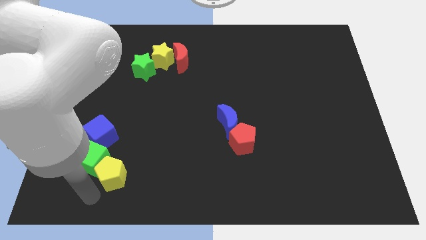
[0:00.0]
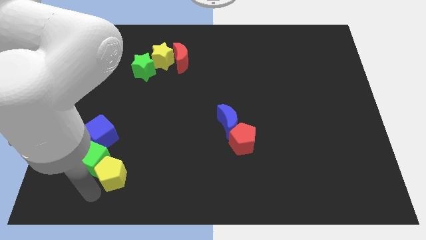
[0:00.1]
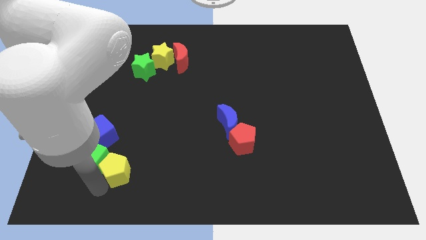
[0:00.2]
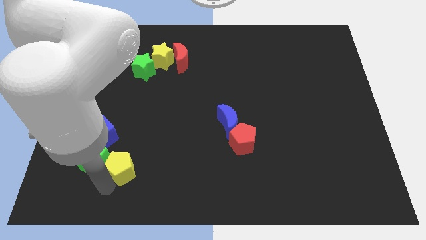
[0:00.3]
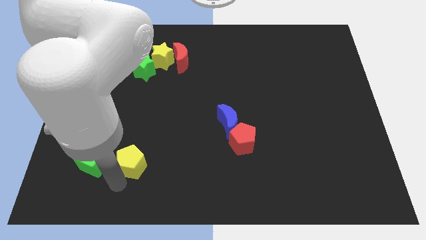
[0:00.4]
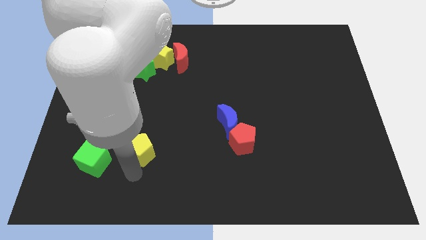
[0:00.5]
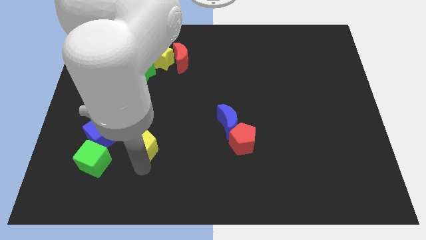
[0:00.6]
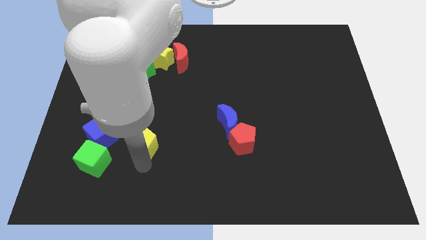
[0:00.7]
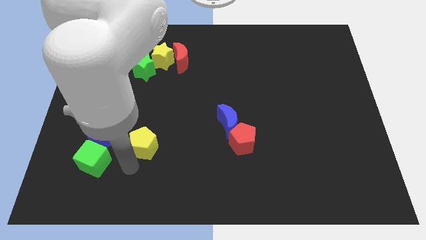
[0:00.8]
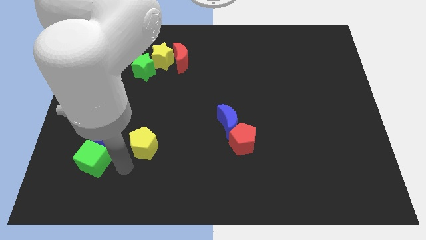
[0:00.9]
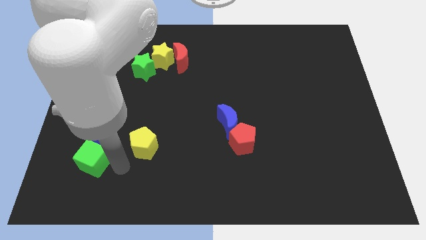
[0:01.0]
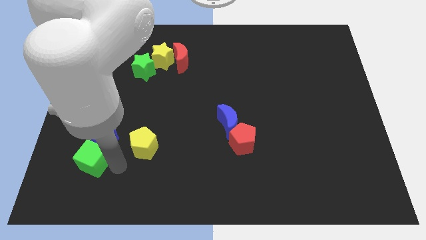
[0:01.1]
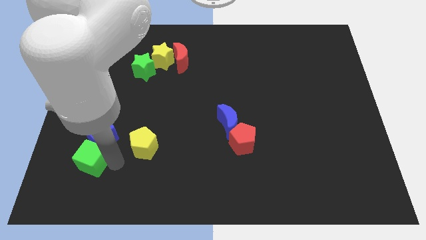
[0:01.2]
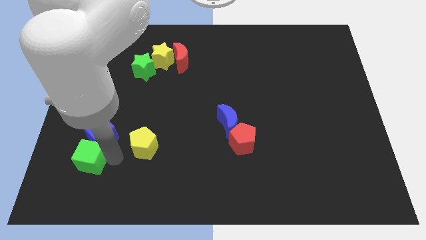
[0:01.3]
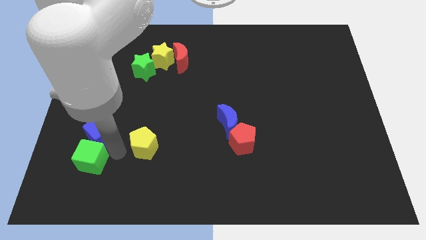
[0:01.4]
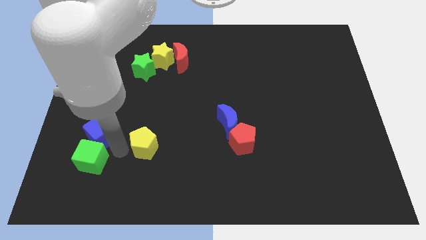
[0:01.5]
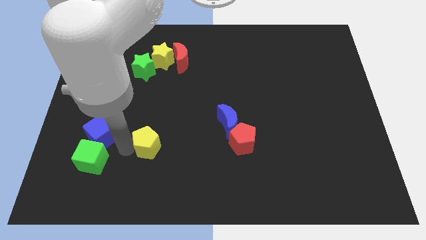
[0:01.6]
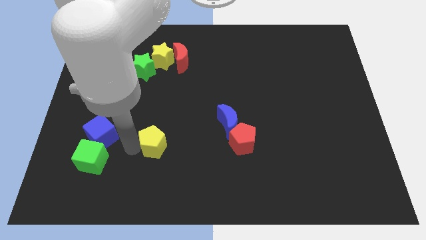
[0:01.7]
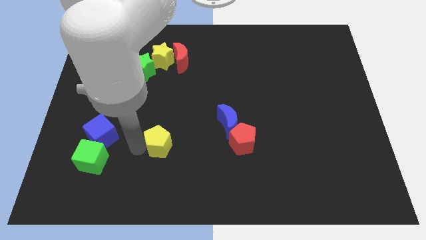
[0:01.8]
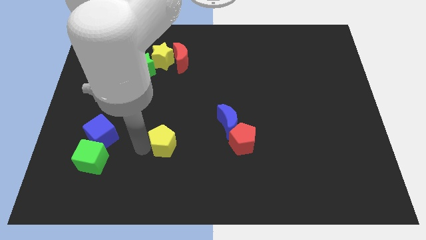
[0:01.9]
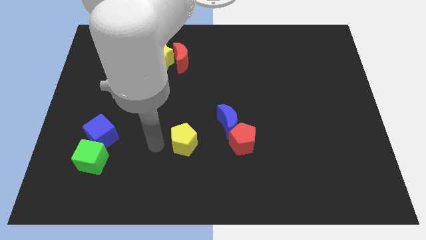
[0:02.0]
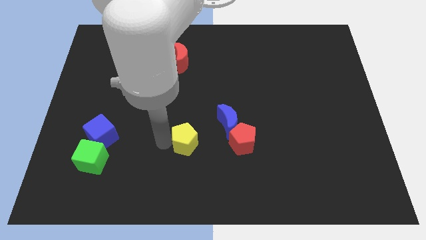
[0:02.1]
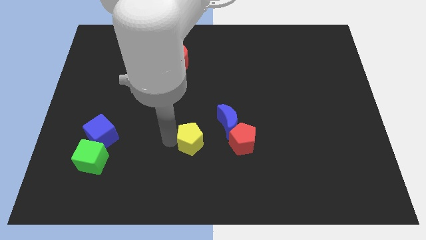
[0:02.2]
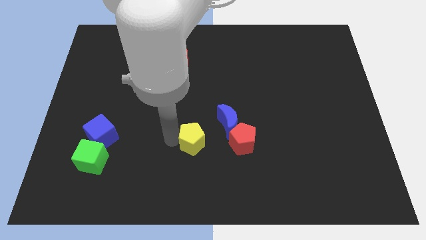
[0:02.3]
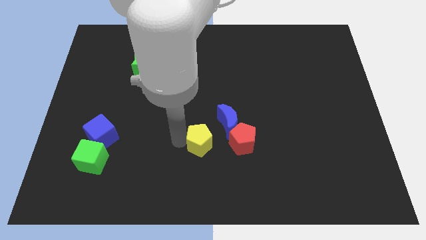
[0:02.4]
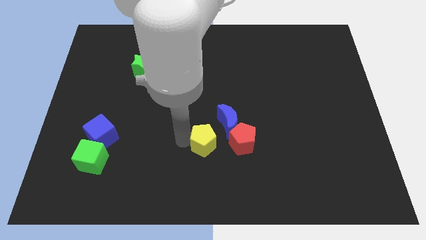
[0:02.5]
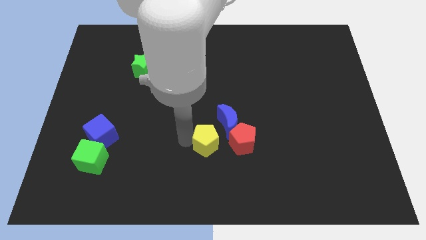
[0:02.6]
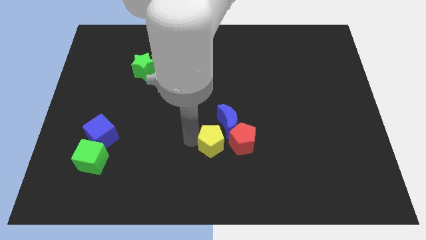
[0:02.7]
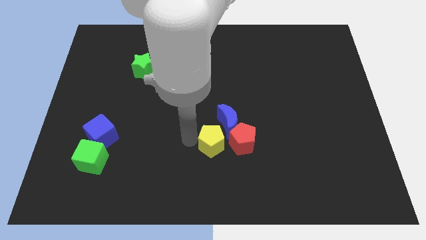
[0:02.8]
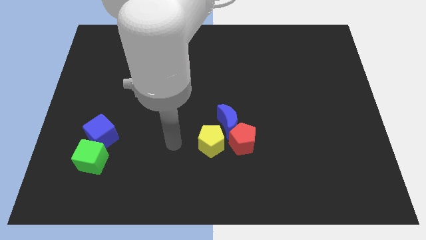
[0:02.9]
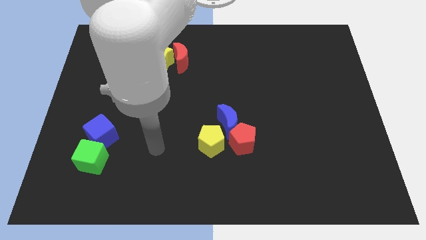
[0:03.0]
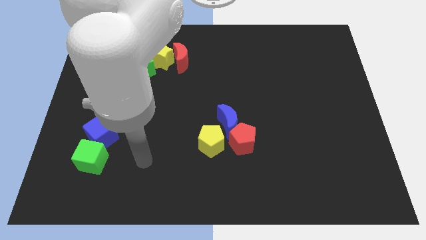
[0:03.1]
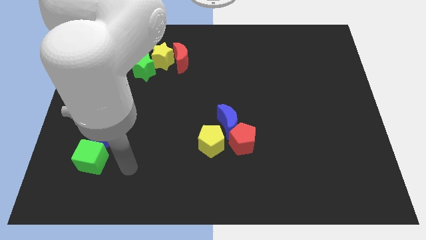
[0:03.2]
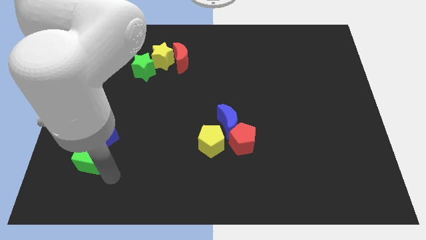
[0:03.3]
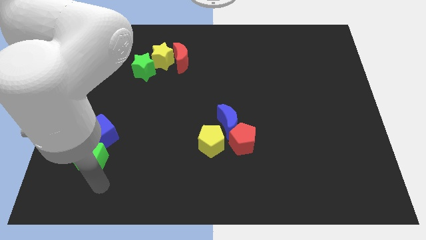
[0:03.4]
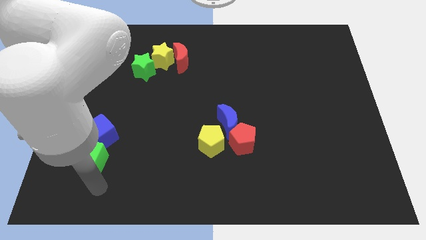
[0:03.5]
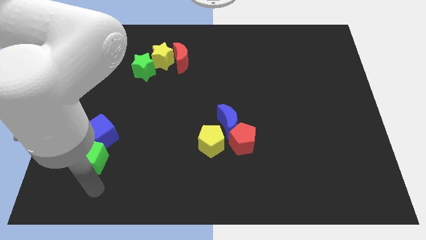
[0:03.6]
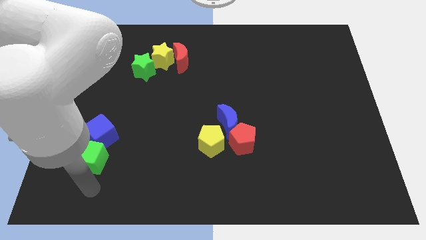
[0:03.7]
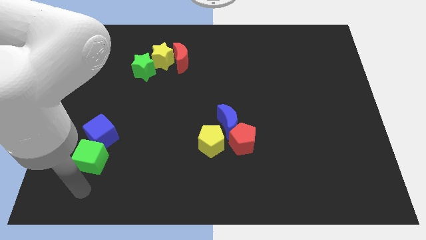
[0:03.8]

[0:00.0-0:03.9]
push the yellow pentagon to the left of the red pentagon

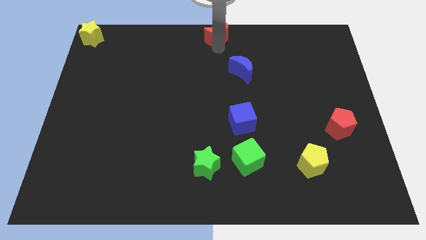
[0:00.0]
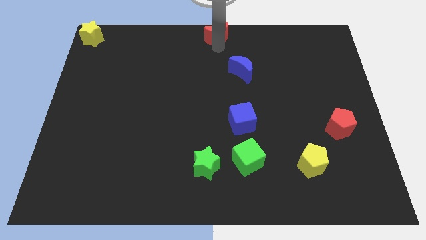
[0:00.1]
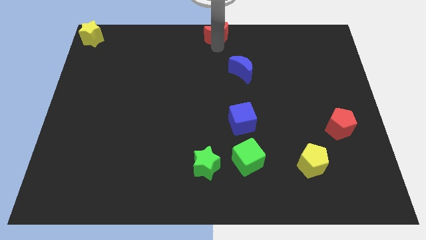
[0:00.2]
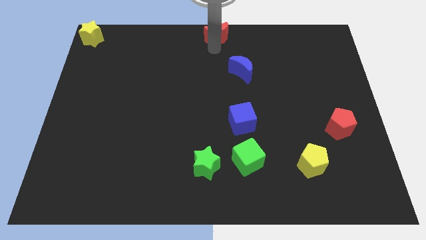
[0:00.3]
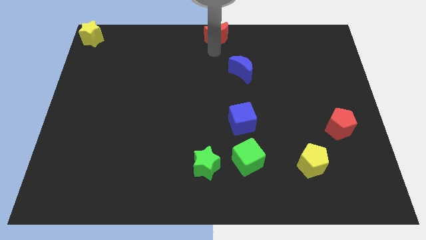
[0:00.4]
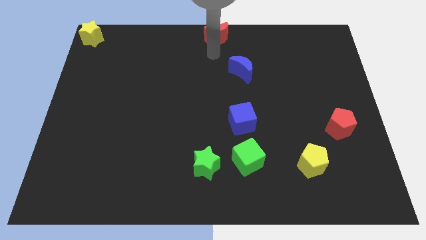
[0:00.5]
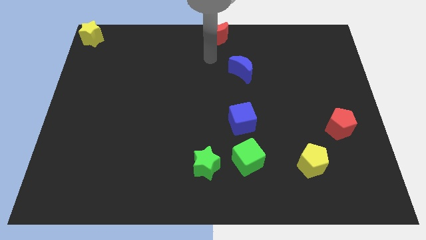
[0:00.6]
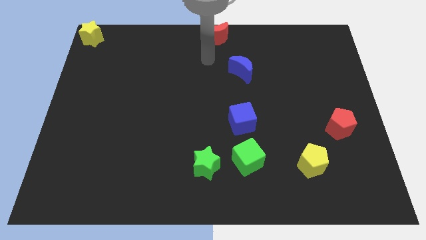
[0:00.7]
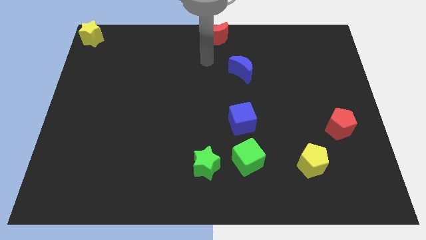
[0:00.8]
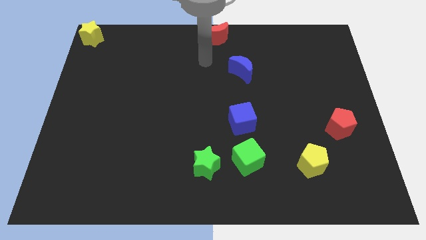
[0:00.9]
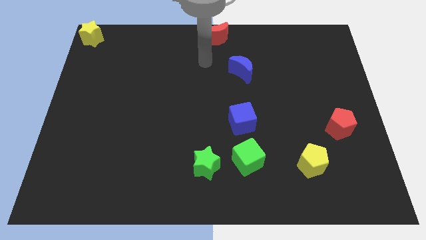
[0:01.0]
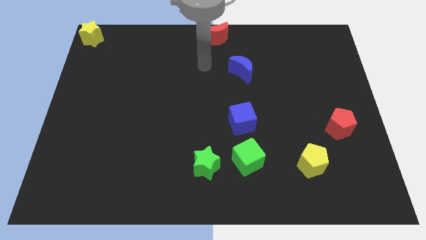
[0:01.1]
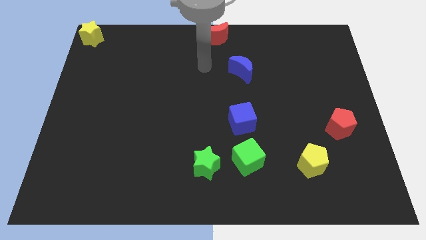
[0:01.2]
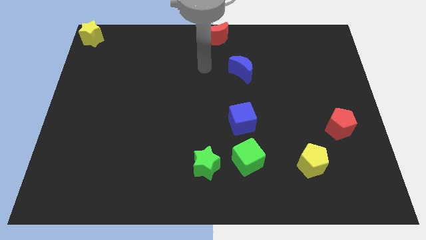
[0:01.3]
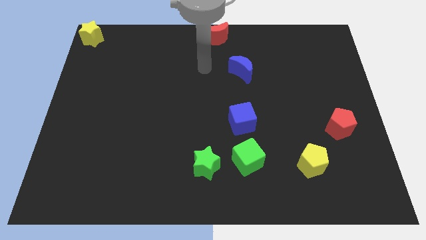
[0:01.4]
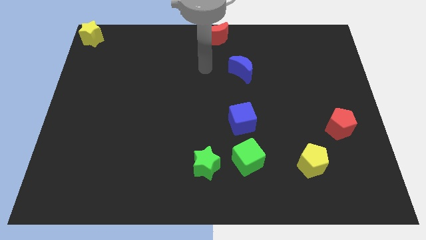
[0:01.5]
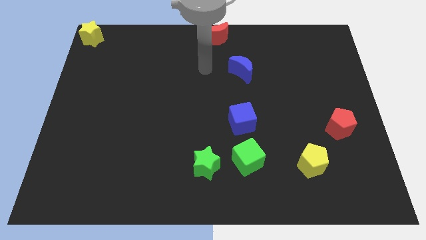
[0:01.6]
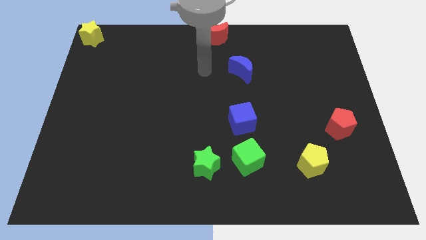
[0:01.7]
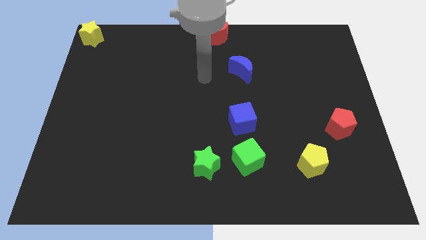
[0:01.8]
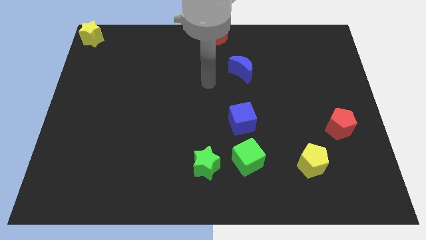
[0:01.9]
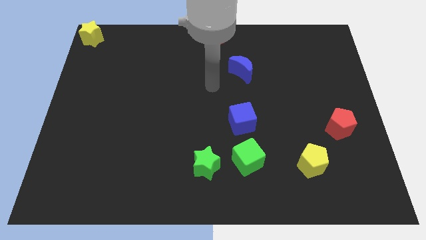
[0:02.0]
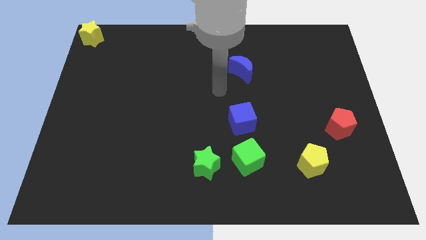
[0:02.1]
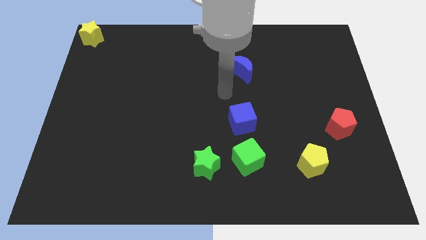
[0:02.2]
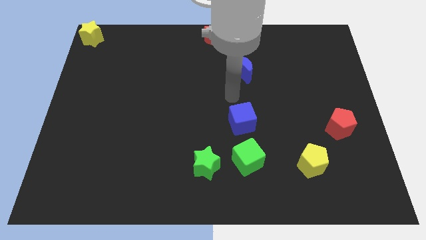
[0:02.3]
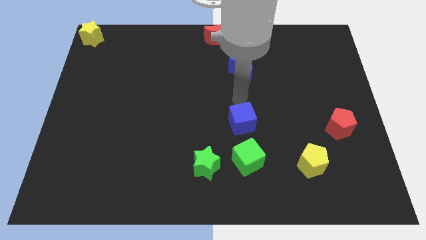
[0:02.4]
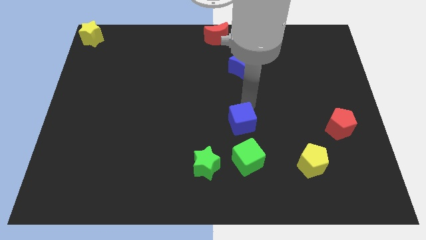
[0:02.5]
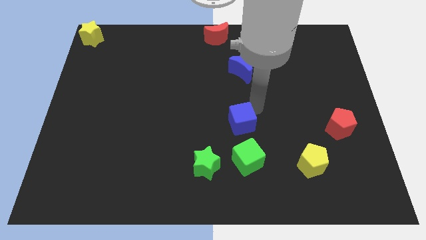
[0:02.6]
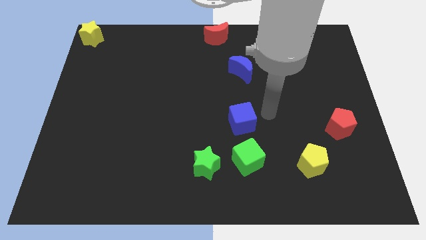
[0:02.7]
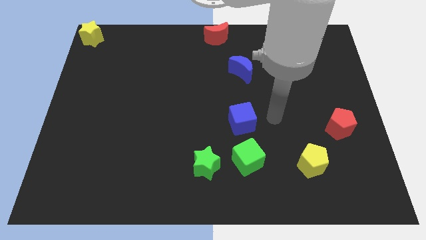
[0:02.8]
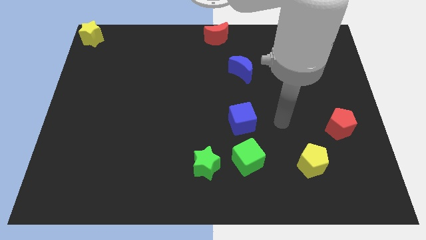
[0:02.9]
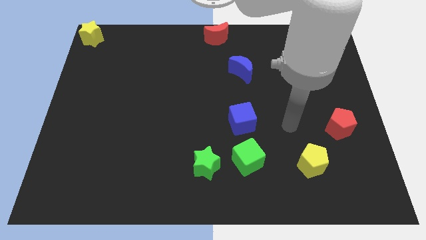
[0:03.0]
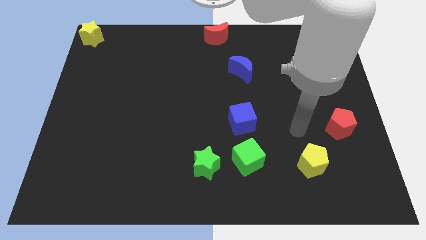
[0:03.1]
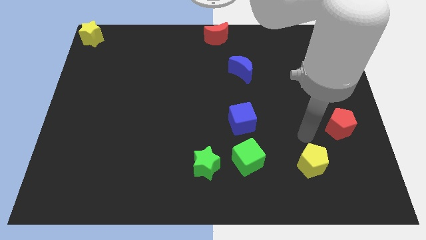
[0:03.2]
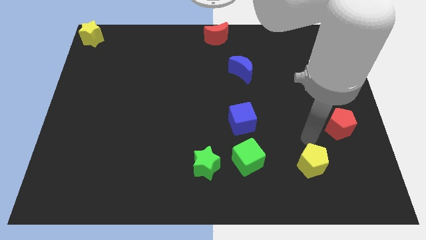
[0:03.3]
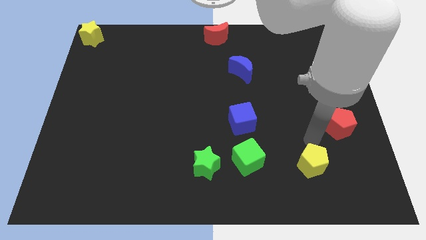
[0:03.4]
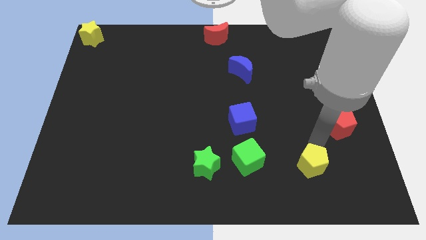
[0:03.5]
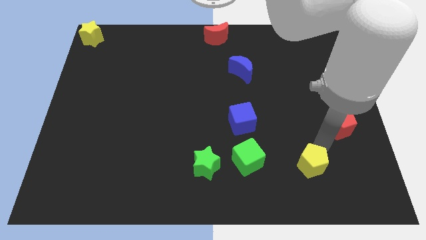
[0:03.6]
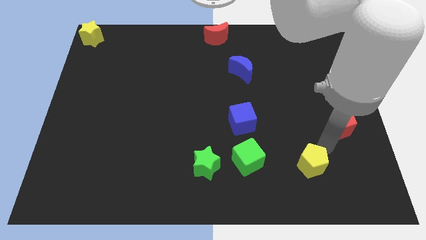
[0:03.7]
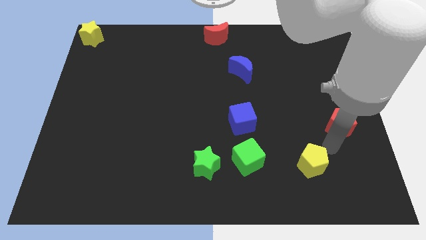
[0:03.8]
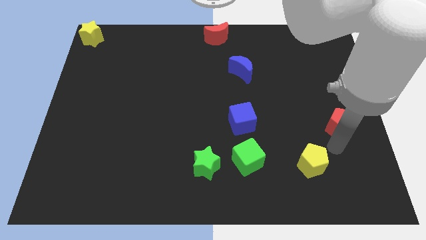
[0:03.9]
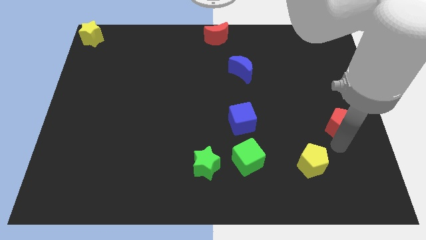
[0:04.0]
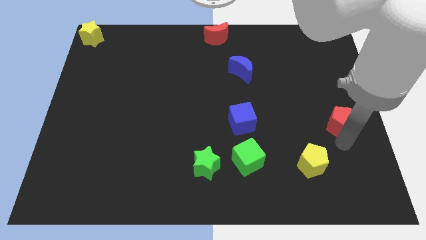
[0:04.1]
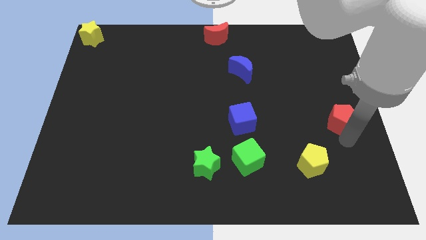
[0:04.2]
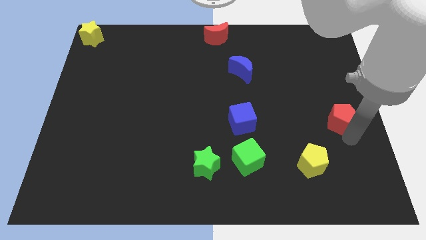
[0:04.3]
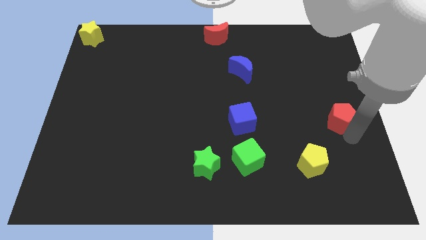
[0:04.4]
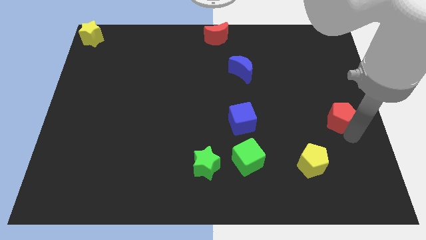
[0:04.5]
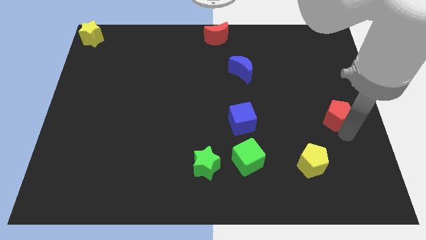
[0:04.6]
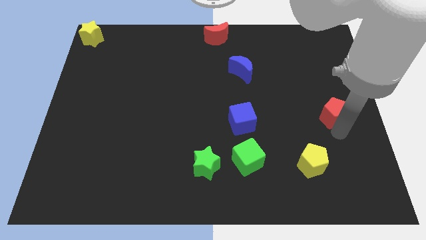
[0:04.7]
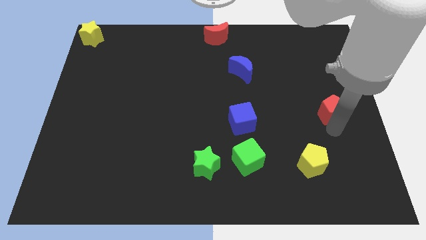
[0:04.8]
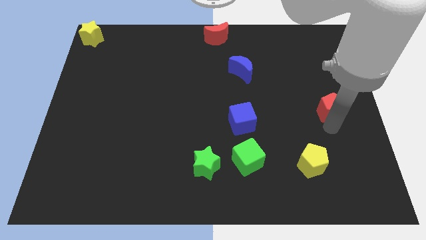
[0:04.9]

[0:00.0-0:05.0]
move the red pentagon parallel to the blue cube
